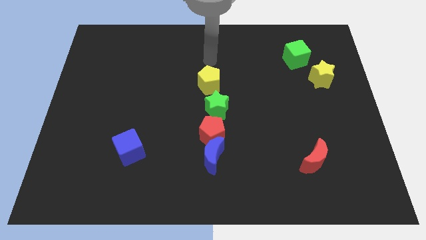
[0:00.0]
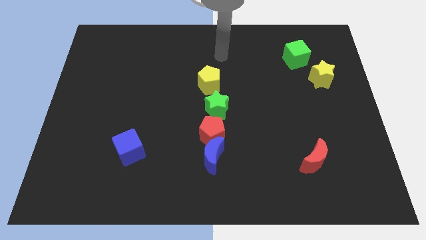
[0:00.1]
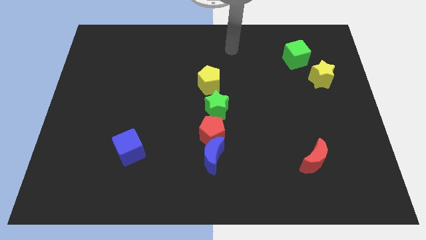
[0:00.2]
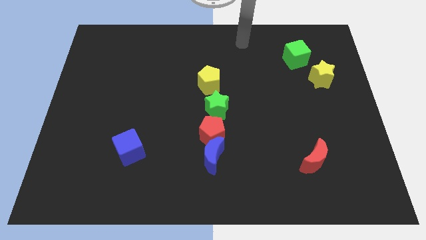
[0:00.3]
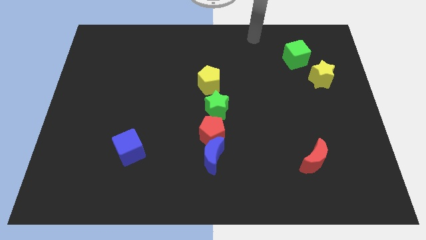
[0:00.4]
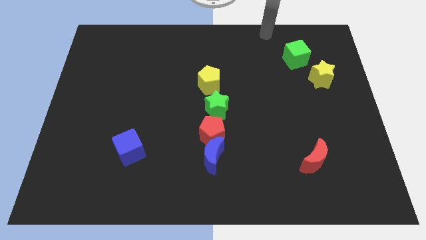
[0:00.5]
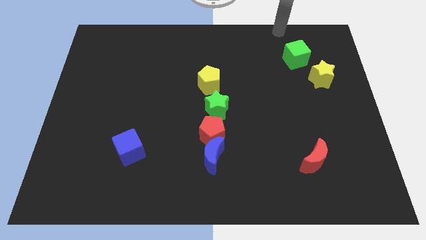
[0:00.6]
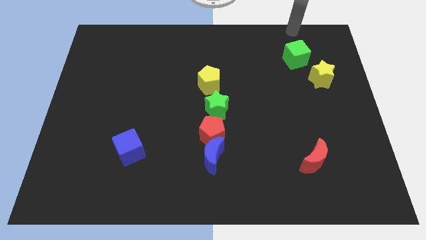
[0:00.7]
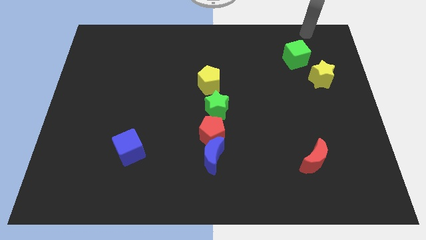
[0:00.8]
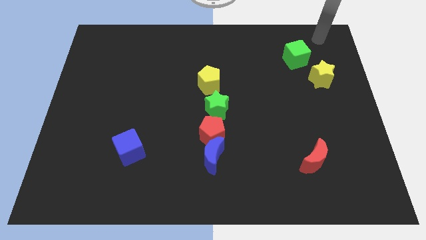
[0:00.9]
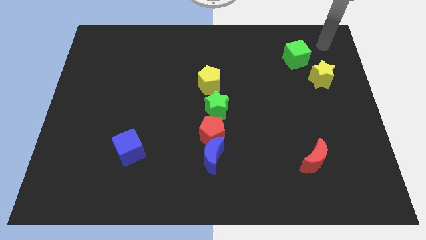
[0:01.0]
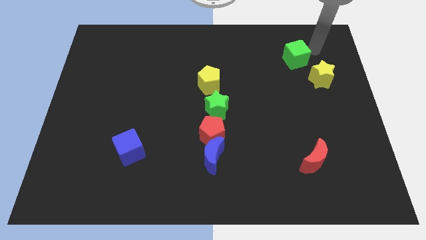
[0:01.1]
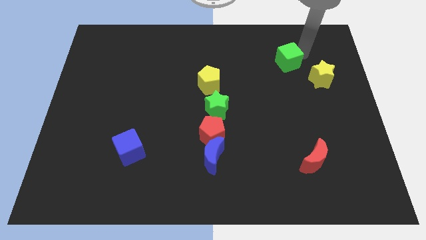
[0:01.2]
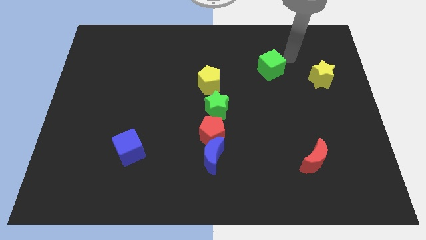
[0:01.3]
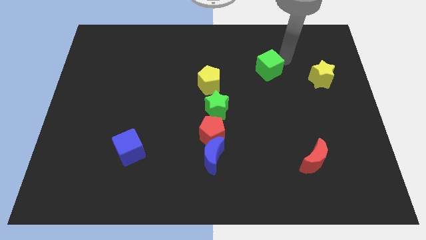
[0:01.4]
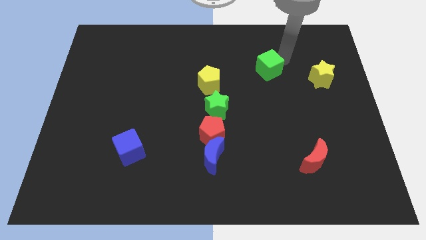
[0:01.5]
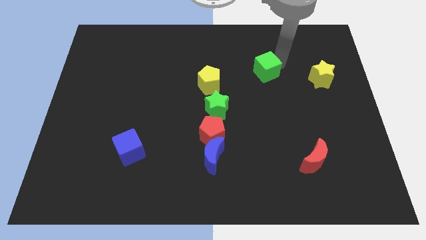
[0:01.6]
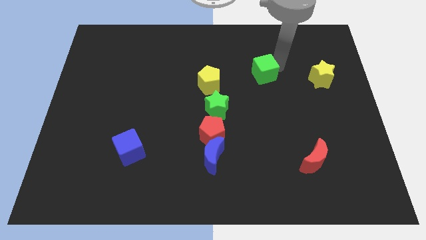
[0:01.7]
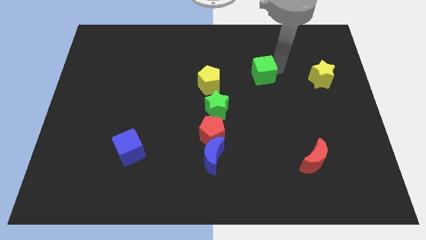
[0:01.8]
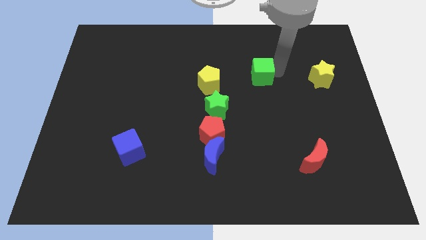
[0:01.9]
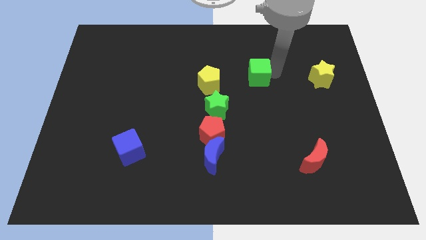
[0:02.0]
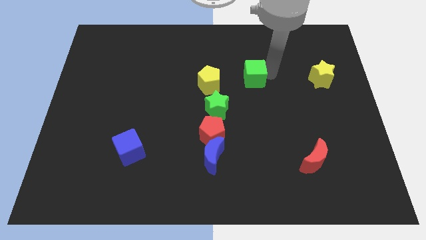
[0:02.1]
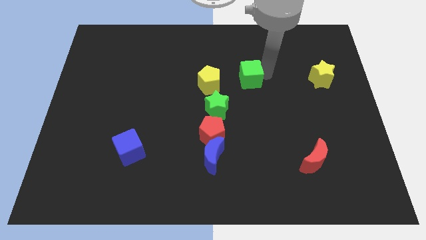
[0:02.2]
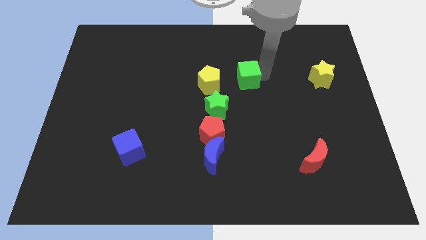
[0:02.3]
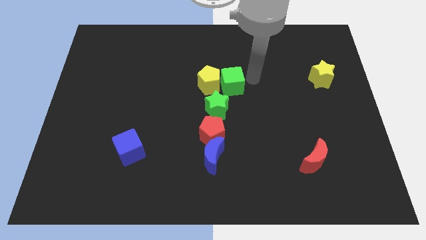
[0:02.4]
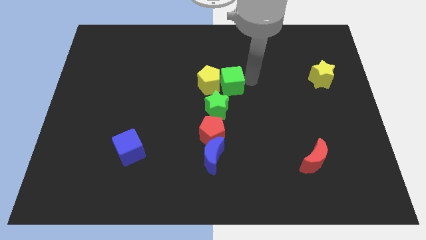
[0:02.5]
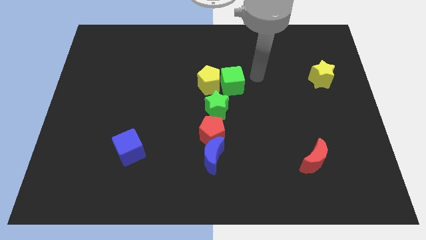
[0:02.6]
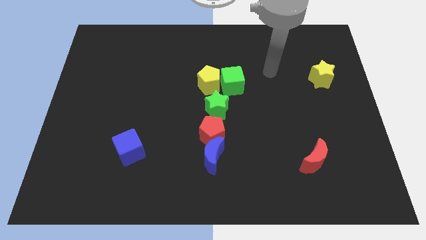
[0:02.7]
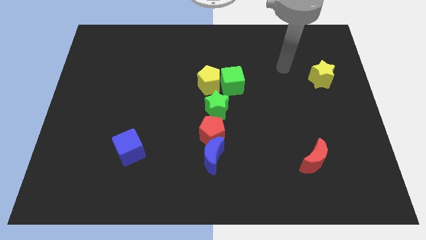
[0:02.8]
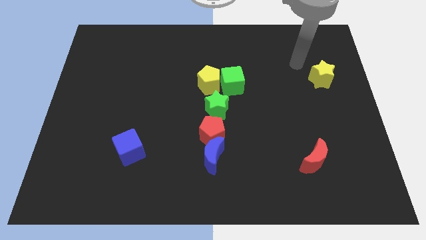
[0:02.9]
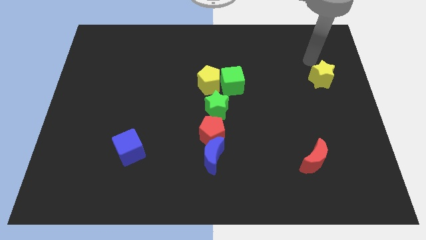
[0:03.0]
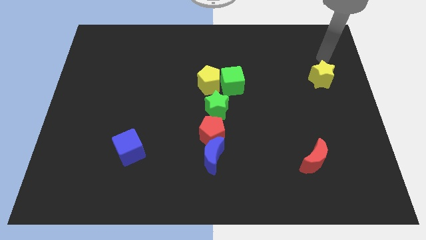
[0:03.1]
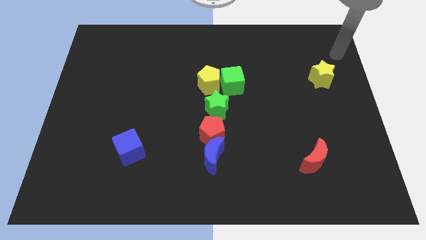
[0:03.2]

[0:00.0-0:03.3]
separate green cube from yellow star

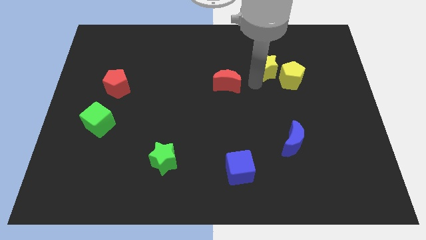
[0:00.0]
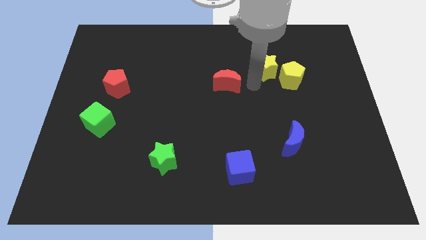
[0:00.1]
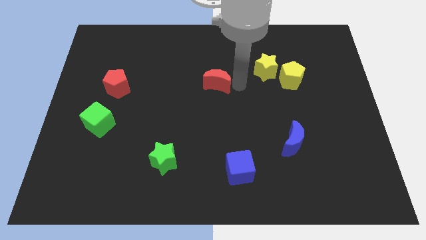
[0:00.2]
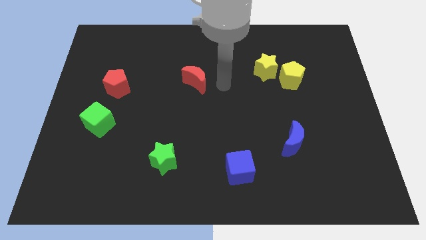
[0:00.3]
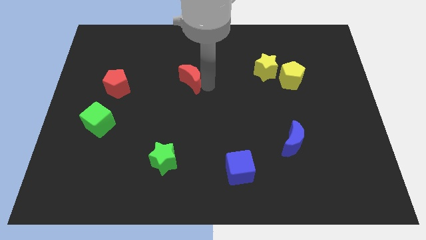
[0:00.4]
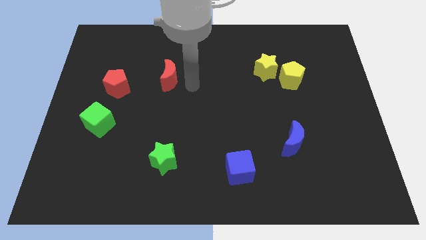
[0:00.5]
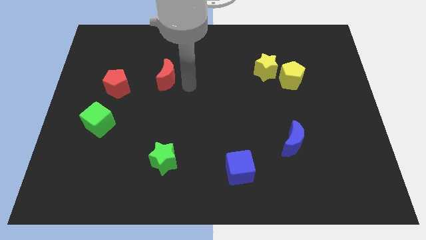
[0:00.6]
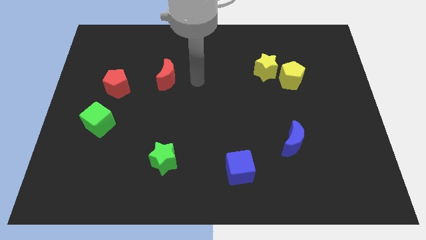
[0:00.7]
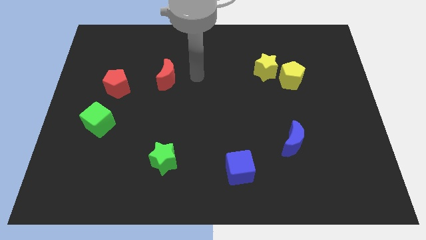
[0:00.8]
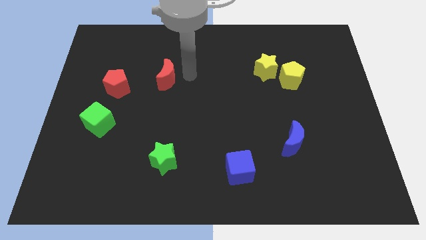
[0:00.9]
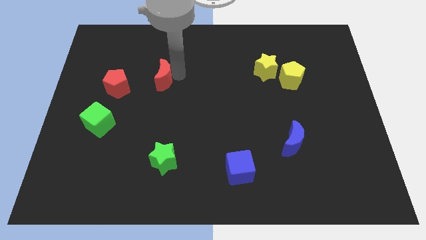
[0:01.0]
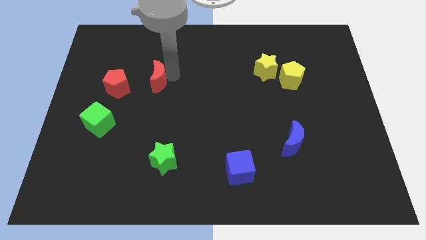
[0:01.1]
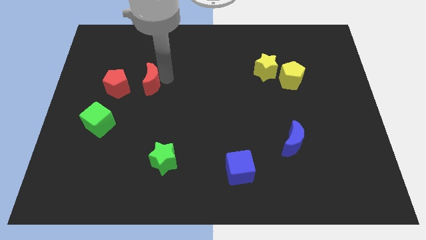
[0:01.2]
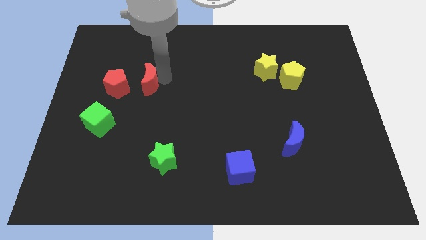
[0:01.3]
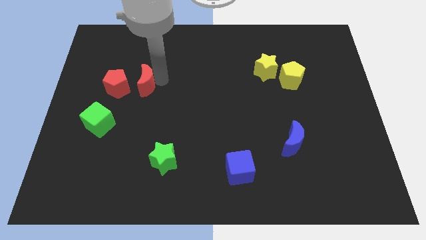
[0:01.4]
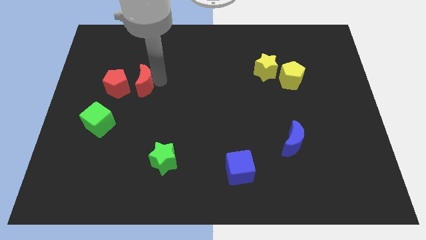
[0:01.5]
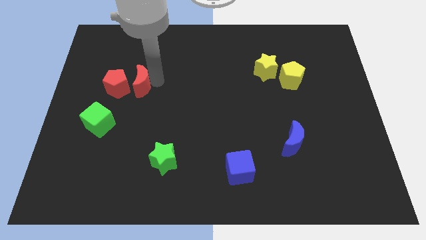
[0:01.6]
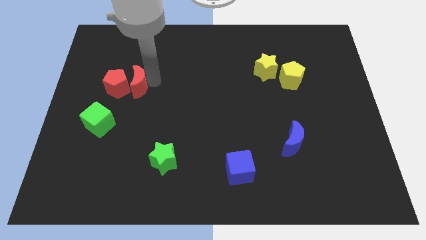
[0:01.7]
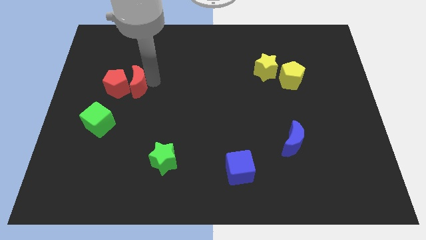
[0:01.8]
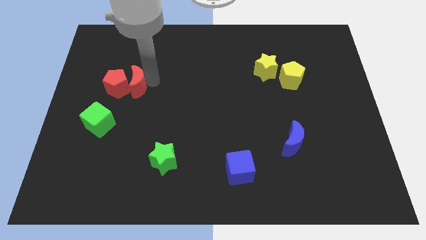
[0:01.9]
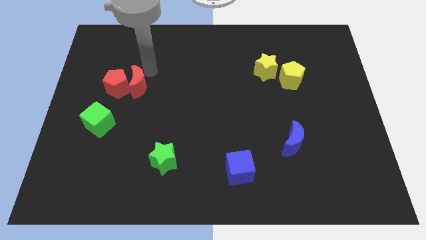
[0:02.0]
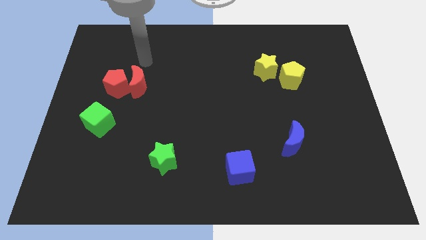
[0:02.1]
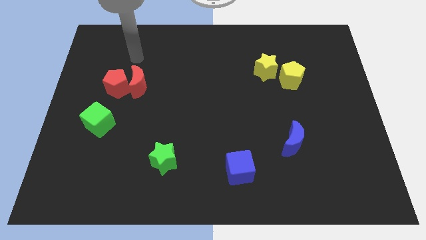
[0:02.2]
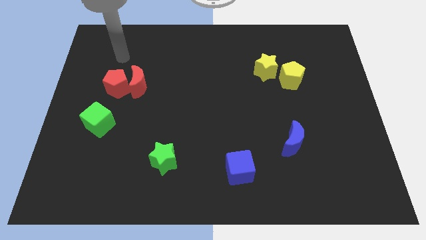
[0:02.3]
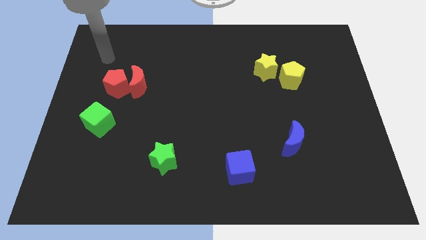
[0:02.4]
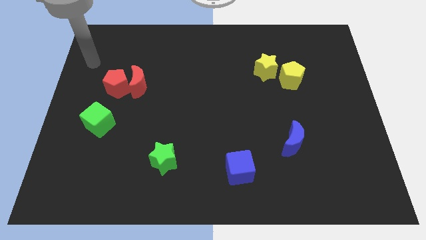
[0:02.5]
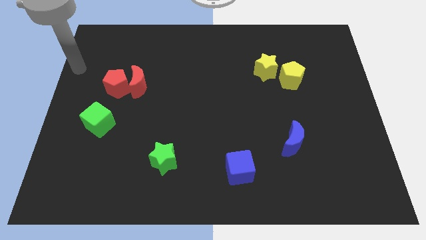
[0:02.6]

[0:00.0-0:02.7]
move the red crescent towards the red pentagon

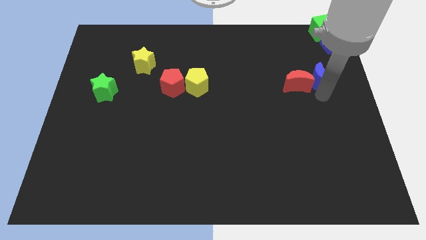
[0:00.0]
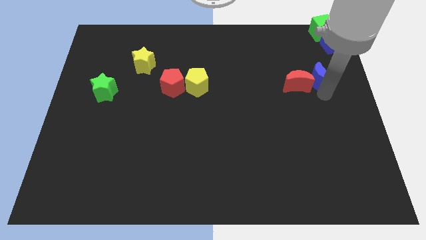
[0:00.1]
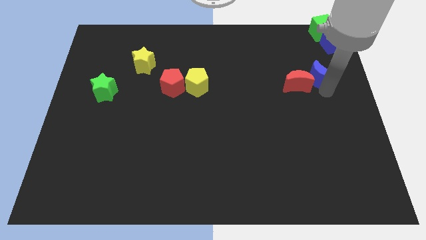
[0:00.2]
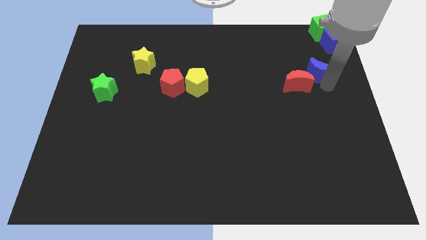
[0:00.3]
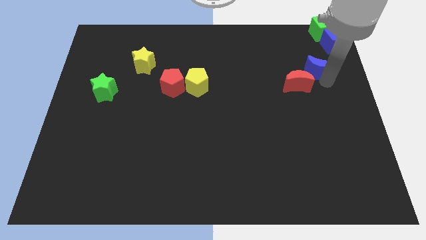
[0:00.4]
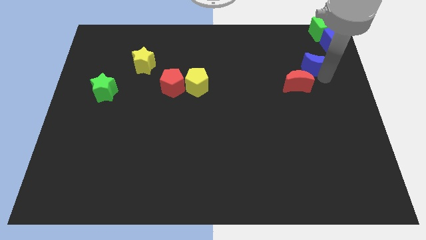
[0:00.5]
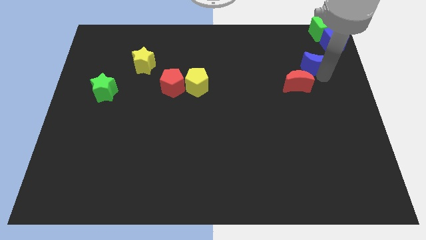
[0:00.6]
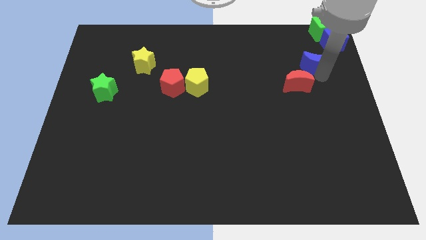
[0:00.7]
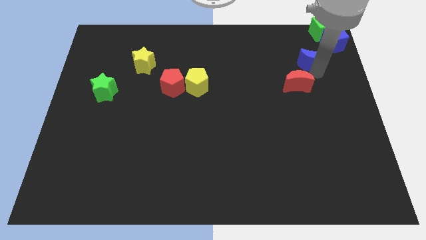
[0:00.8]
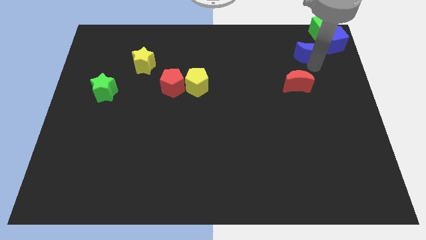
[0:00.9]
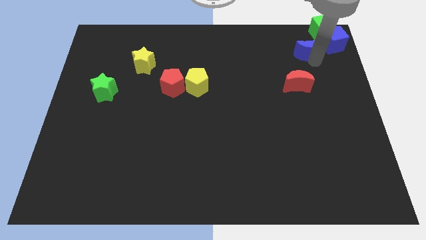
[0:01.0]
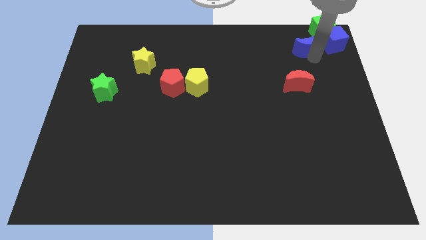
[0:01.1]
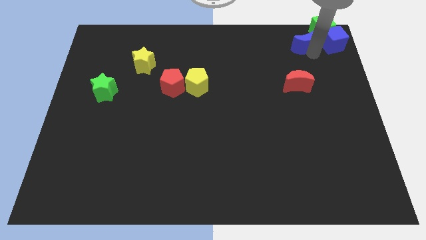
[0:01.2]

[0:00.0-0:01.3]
push the blue crescent slightly to the top

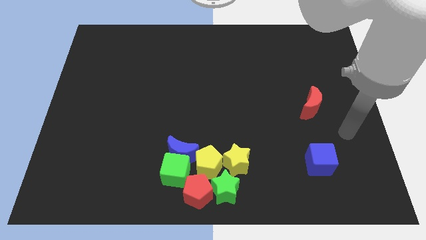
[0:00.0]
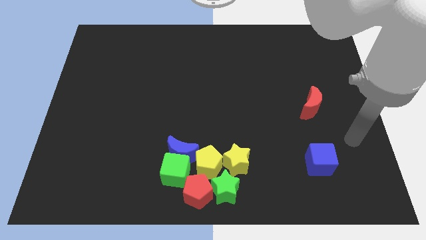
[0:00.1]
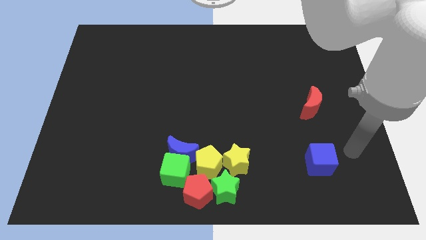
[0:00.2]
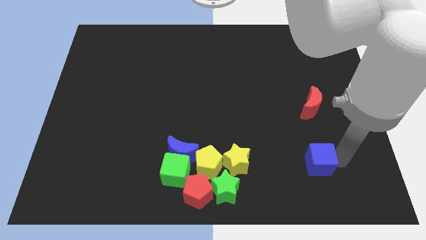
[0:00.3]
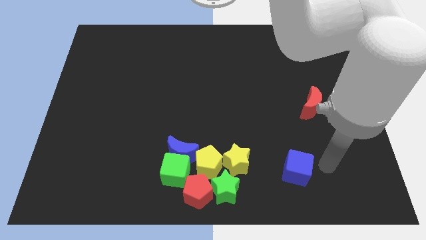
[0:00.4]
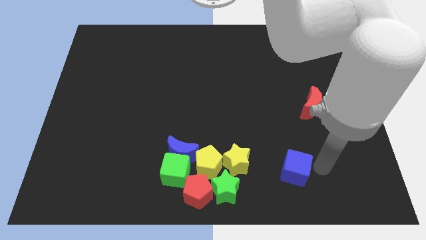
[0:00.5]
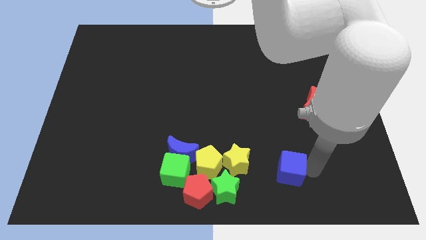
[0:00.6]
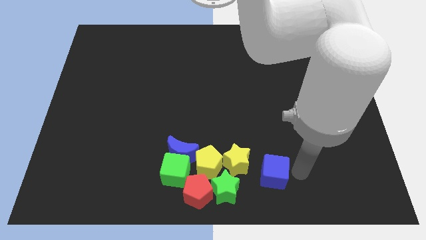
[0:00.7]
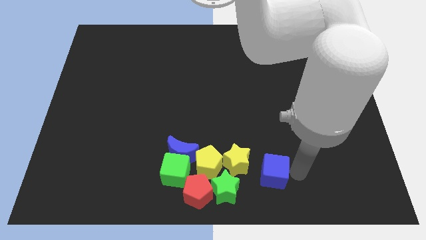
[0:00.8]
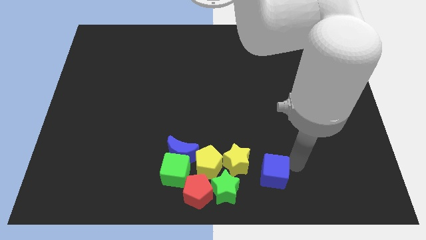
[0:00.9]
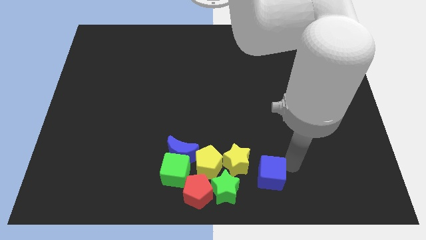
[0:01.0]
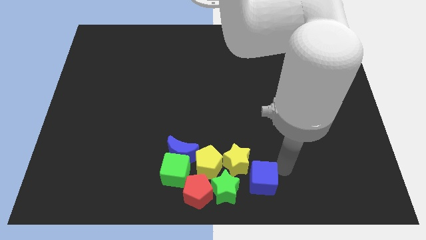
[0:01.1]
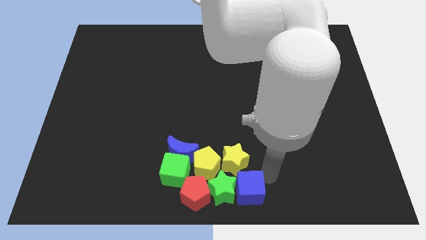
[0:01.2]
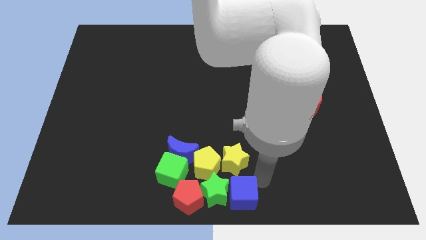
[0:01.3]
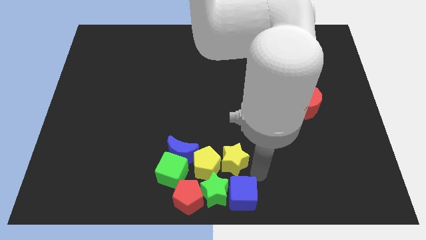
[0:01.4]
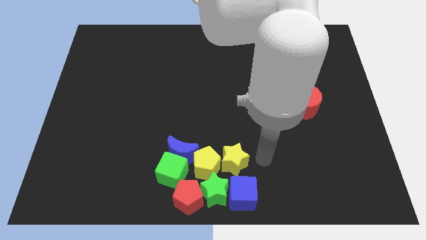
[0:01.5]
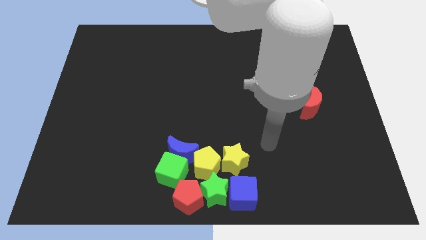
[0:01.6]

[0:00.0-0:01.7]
move the blue cube into the green star

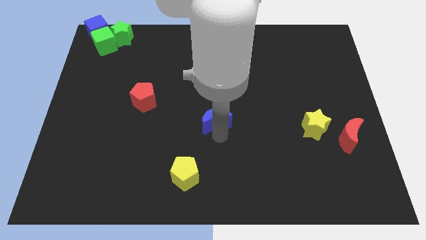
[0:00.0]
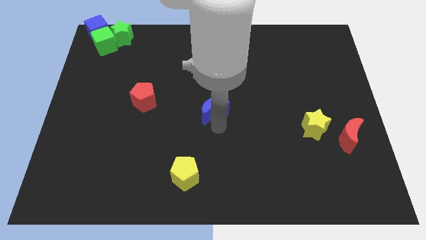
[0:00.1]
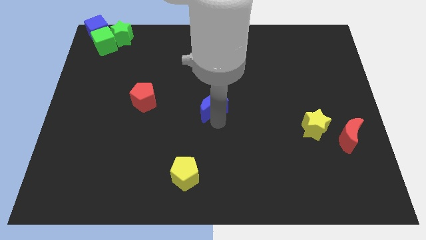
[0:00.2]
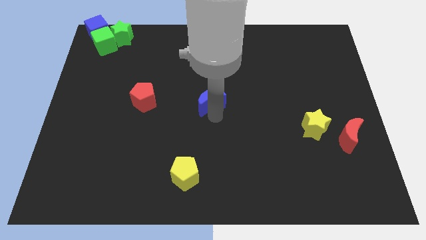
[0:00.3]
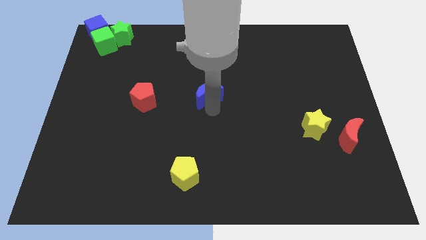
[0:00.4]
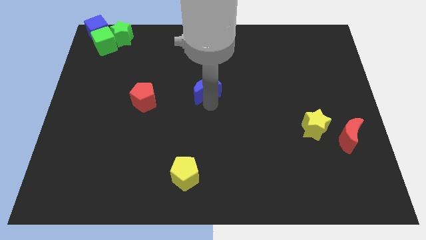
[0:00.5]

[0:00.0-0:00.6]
place the blue moon parallel to the red pentagon
